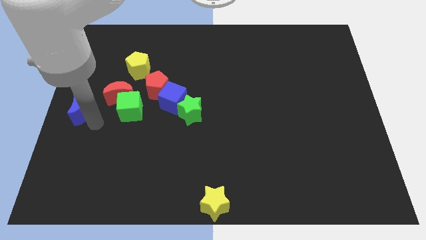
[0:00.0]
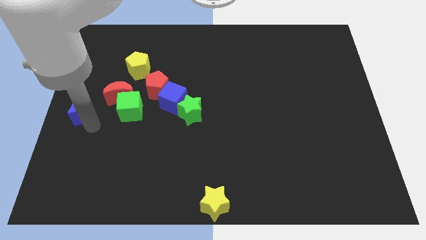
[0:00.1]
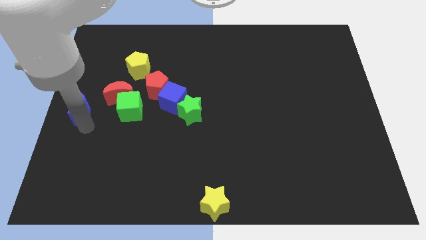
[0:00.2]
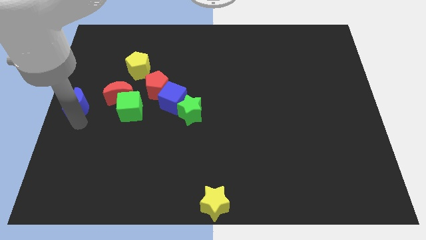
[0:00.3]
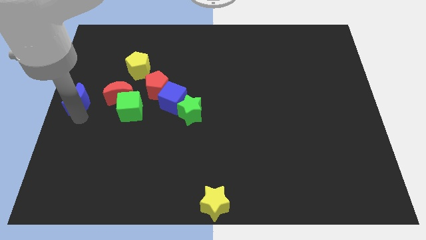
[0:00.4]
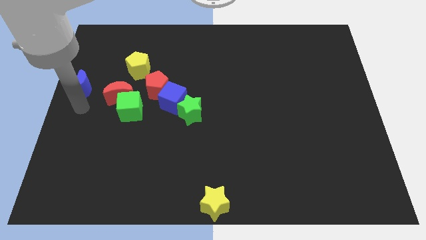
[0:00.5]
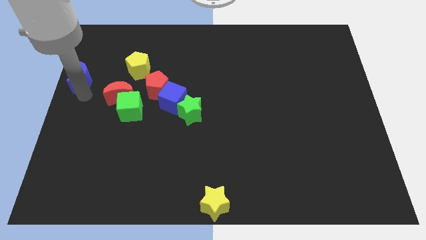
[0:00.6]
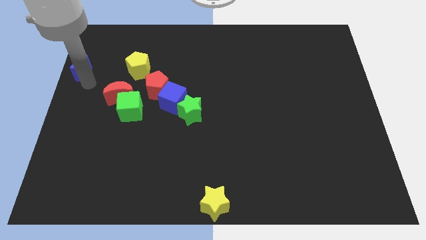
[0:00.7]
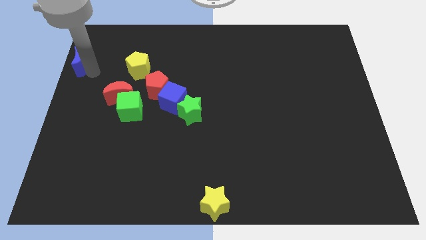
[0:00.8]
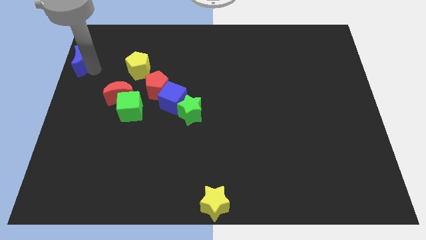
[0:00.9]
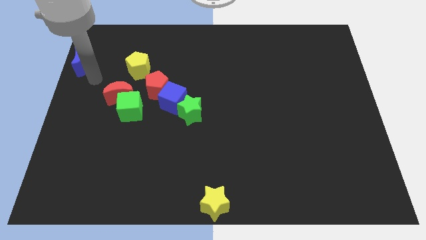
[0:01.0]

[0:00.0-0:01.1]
slide the blue moon diagonally top left to the red moon

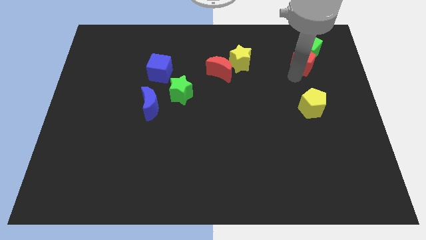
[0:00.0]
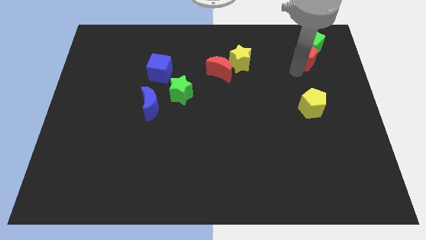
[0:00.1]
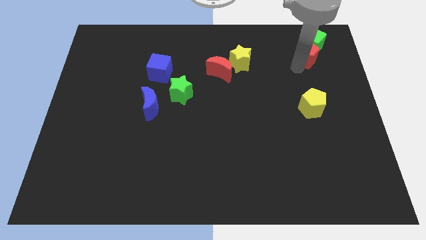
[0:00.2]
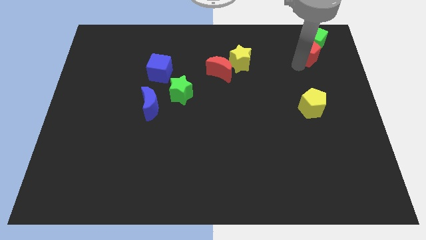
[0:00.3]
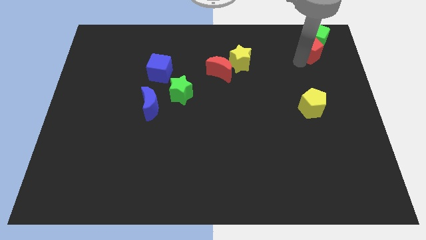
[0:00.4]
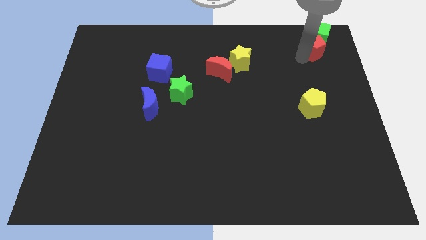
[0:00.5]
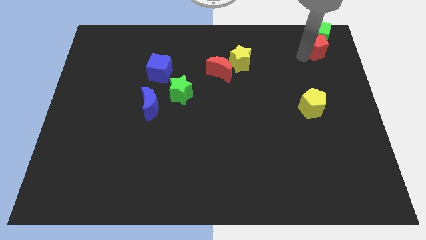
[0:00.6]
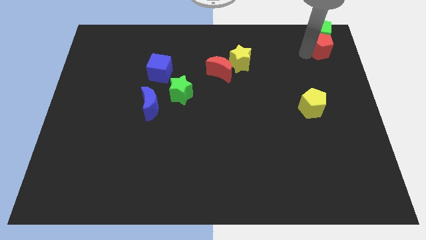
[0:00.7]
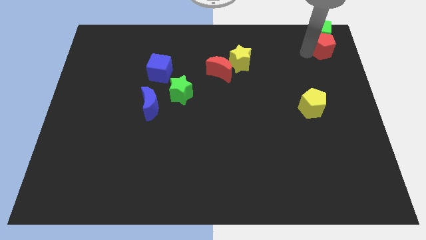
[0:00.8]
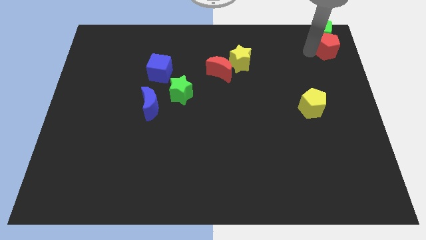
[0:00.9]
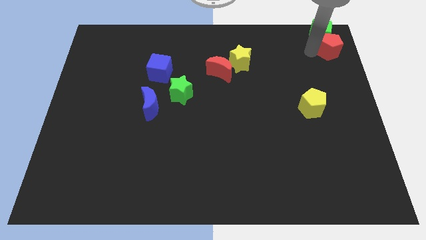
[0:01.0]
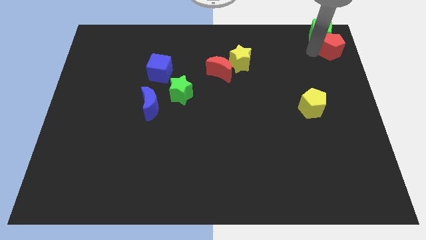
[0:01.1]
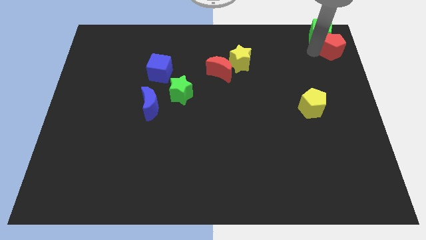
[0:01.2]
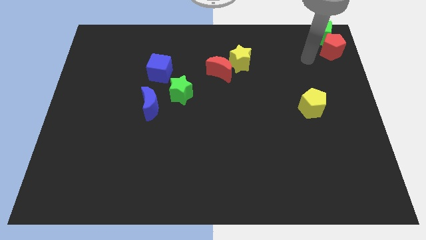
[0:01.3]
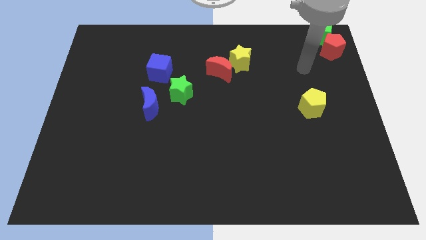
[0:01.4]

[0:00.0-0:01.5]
move red pentagon and green cube to the top right of the board

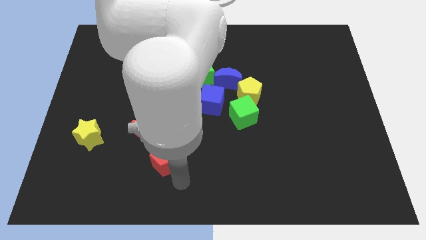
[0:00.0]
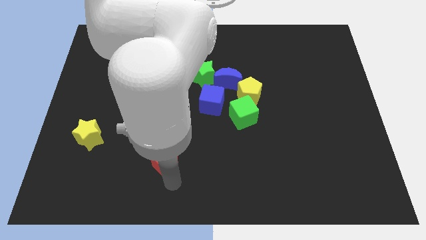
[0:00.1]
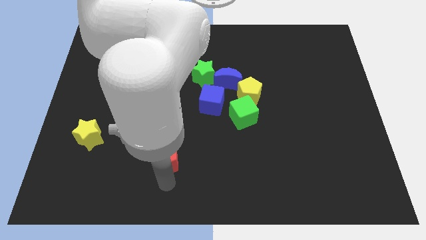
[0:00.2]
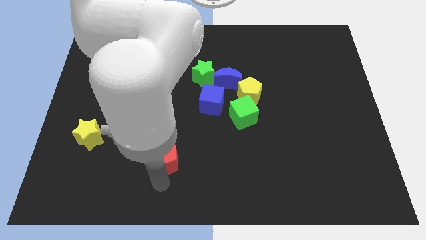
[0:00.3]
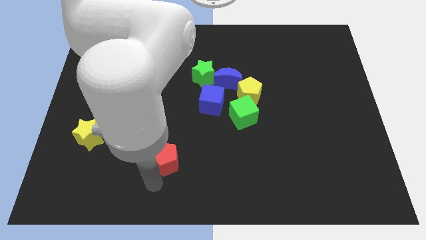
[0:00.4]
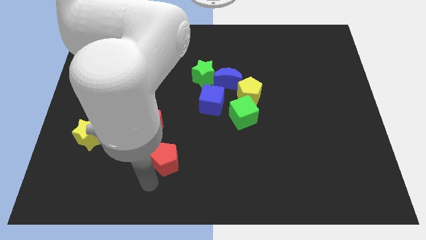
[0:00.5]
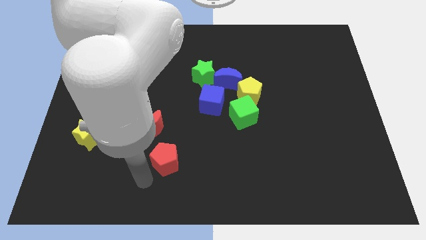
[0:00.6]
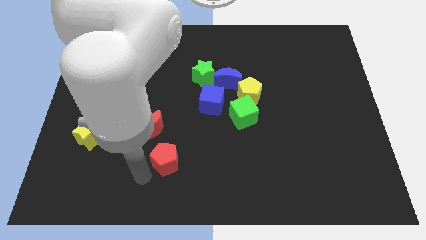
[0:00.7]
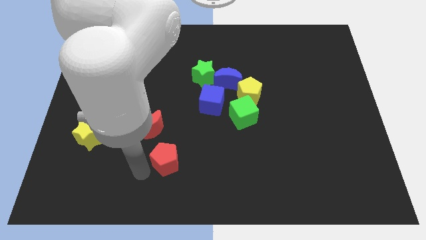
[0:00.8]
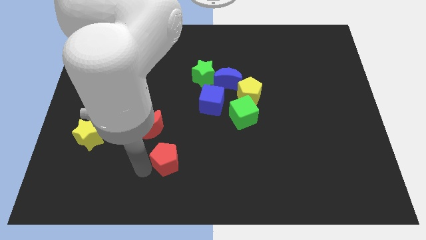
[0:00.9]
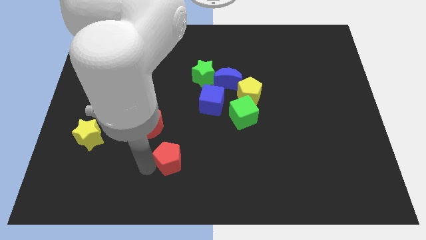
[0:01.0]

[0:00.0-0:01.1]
tap the left side of the red pentagon

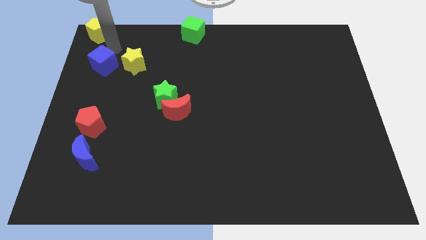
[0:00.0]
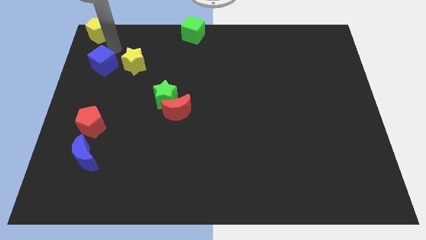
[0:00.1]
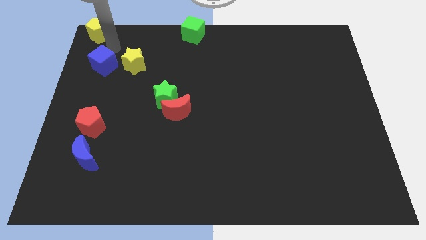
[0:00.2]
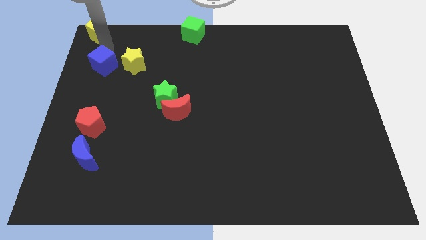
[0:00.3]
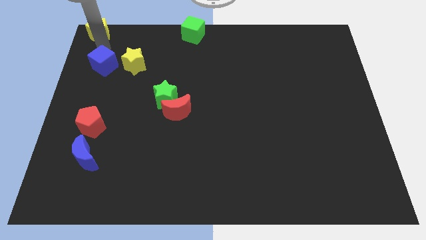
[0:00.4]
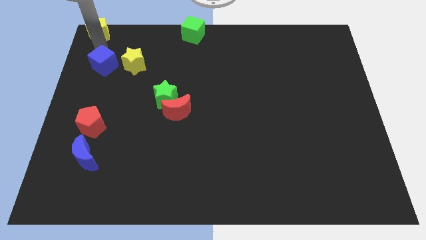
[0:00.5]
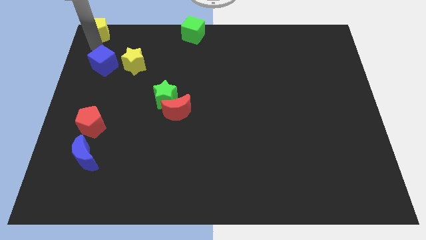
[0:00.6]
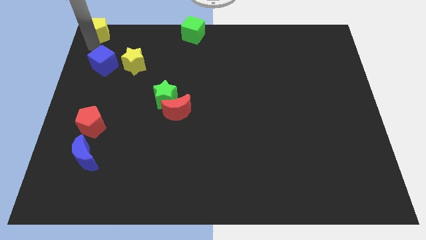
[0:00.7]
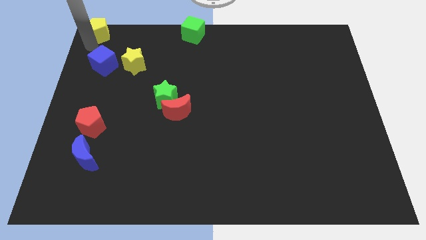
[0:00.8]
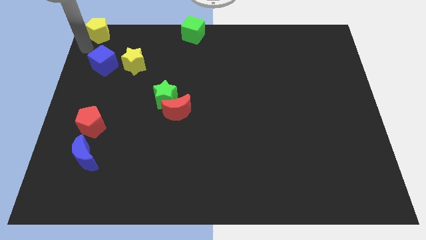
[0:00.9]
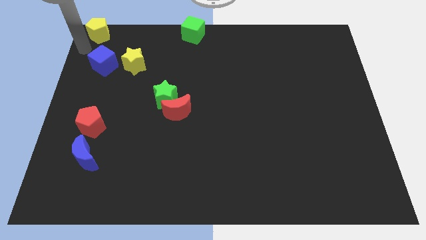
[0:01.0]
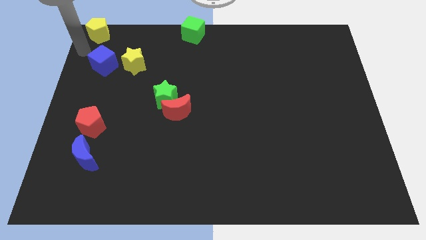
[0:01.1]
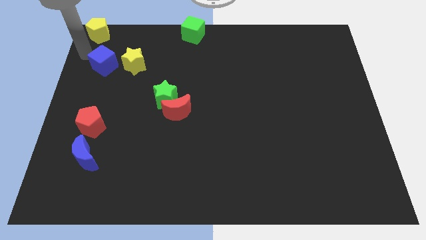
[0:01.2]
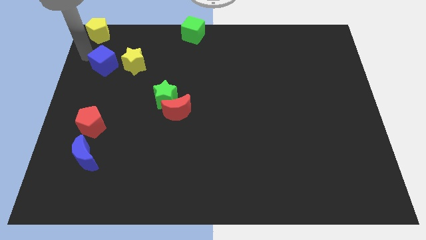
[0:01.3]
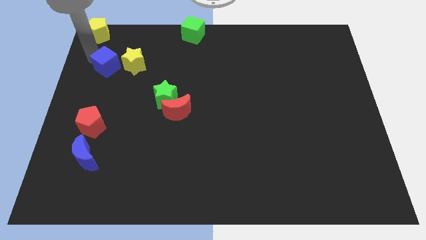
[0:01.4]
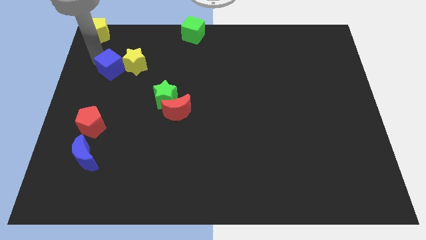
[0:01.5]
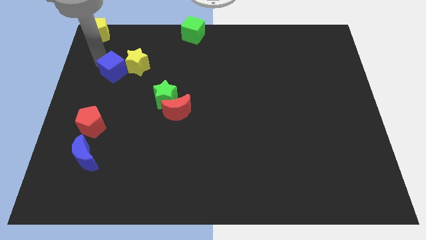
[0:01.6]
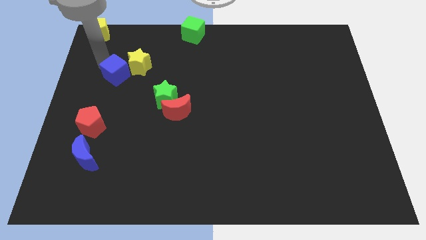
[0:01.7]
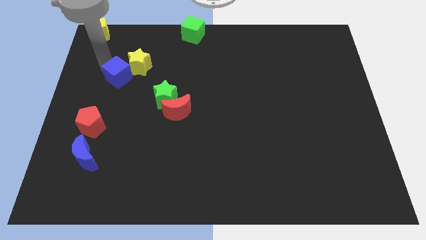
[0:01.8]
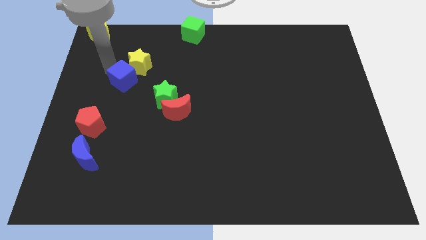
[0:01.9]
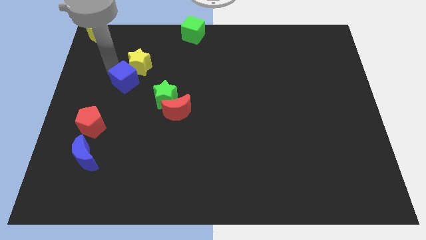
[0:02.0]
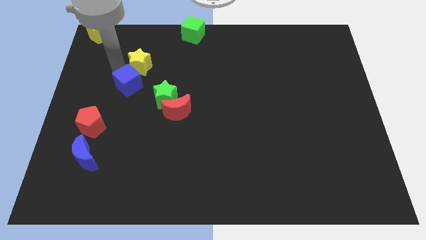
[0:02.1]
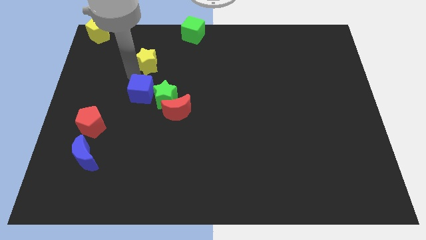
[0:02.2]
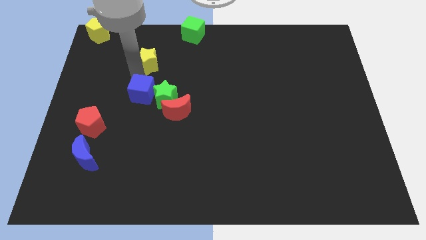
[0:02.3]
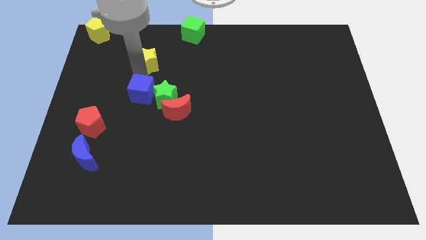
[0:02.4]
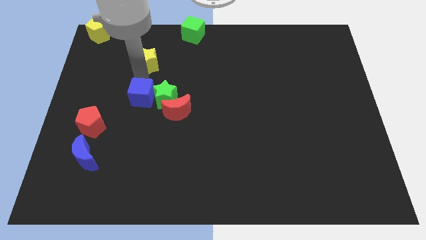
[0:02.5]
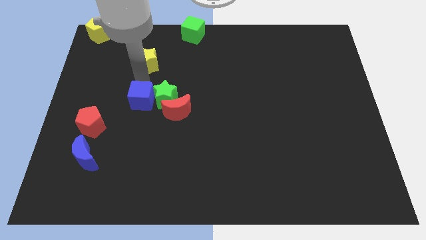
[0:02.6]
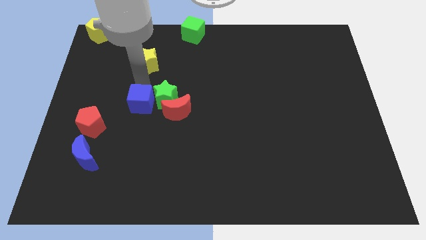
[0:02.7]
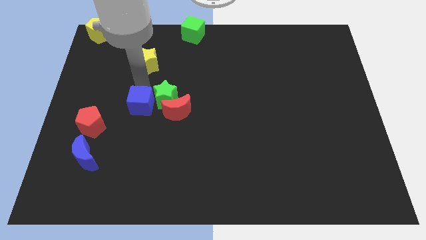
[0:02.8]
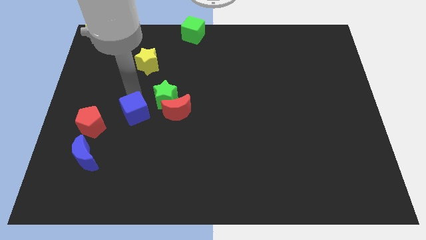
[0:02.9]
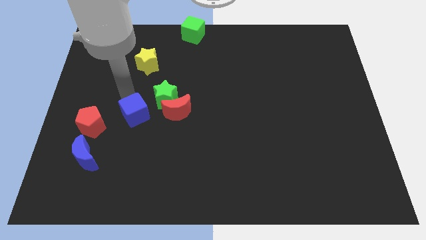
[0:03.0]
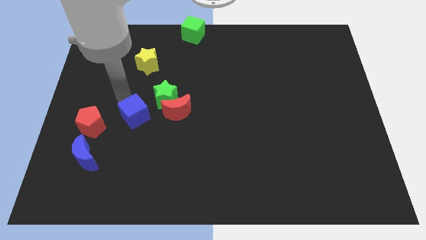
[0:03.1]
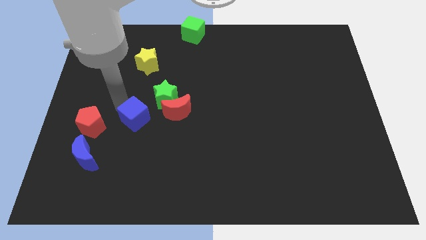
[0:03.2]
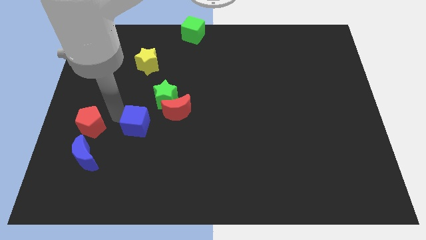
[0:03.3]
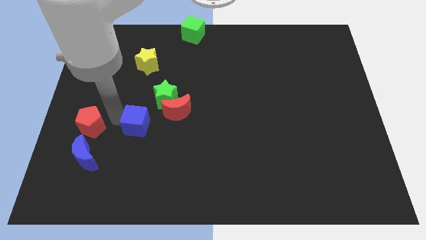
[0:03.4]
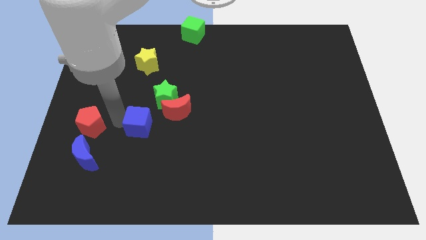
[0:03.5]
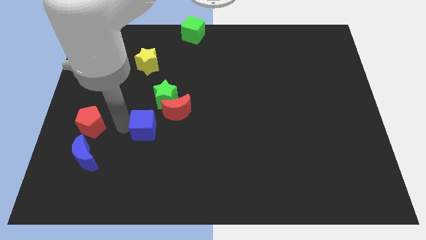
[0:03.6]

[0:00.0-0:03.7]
push the blue cube slightly downwards

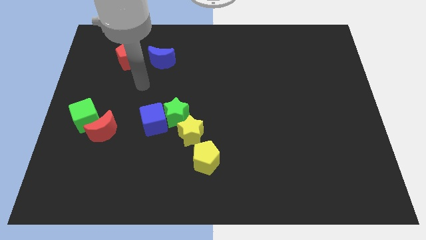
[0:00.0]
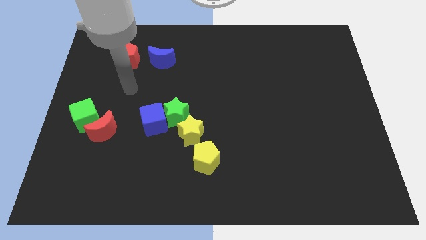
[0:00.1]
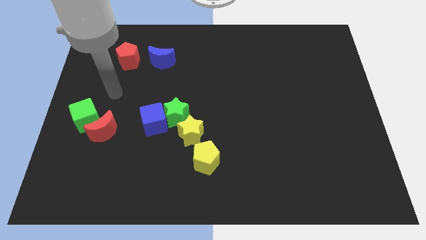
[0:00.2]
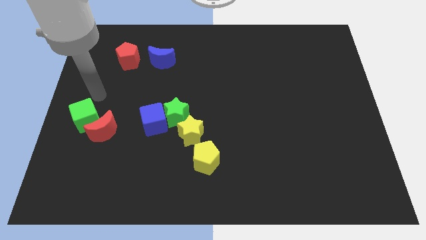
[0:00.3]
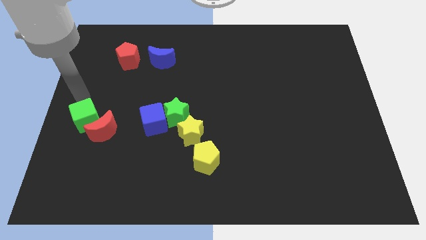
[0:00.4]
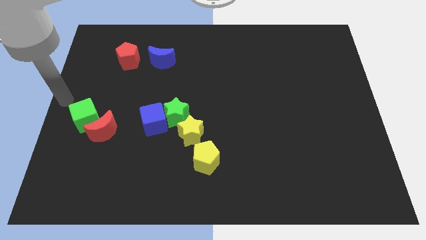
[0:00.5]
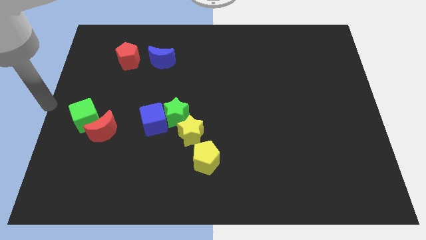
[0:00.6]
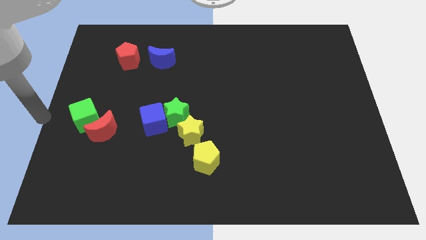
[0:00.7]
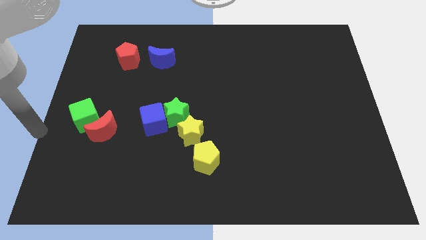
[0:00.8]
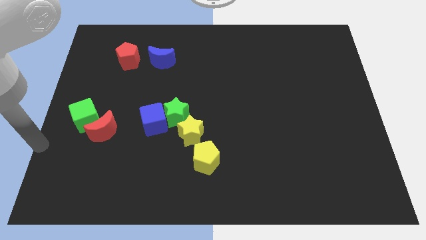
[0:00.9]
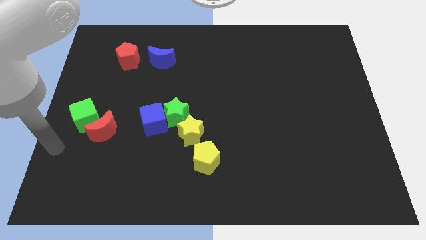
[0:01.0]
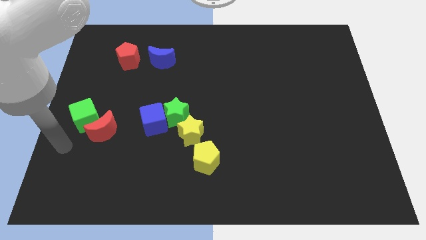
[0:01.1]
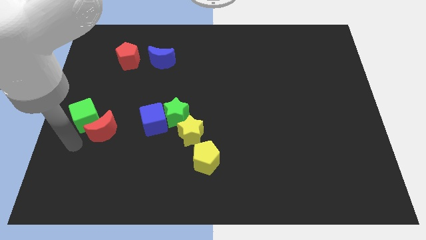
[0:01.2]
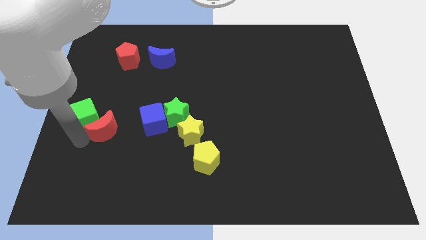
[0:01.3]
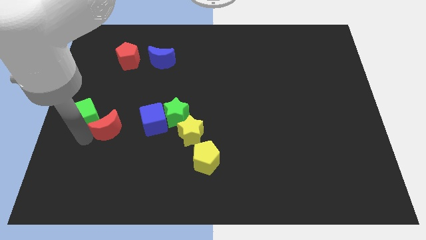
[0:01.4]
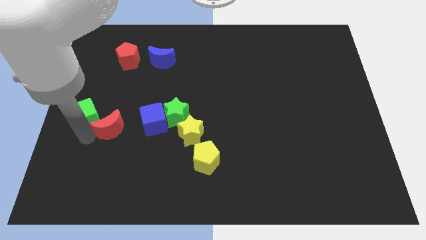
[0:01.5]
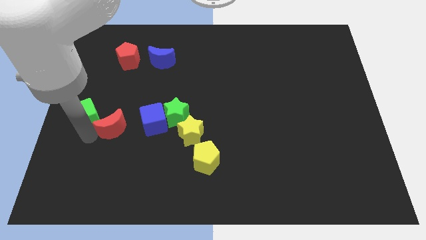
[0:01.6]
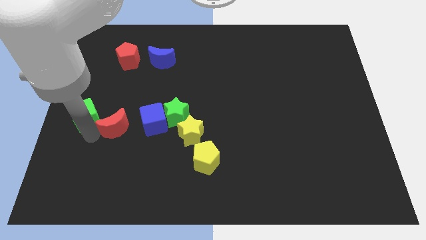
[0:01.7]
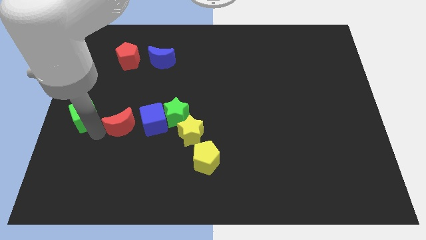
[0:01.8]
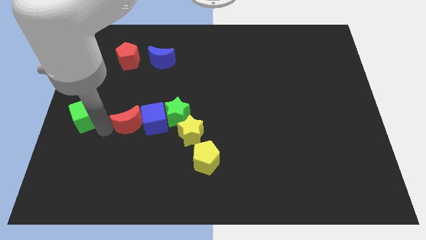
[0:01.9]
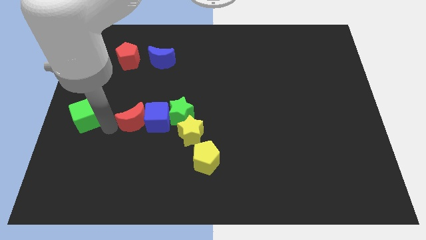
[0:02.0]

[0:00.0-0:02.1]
push the red pentagon into the blue cube
